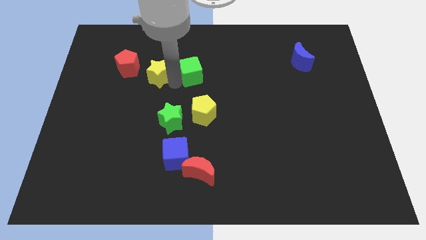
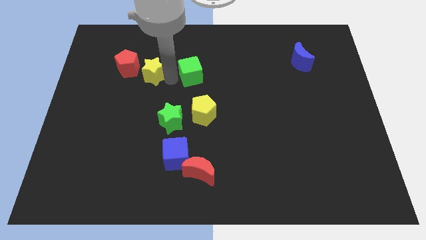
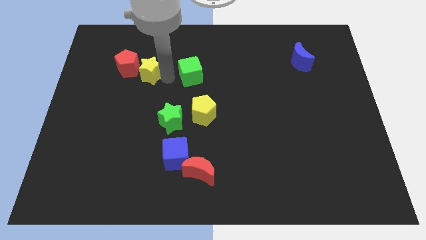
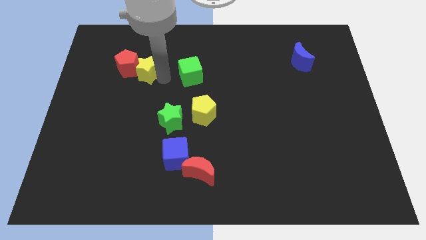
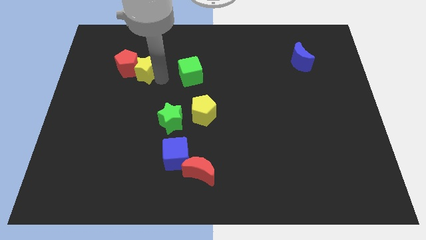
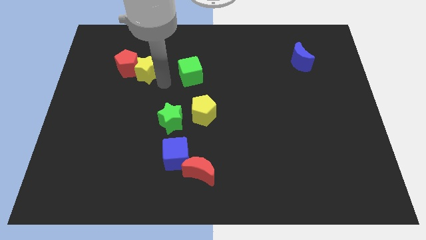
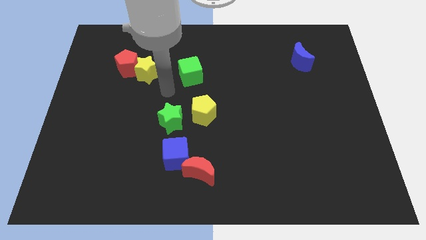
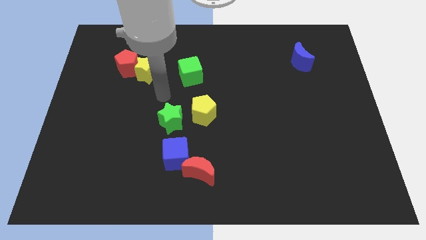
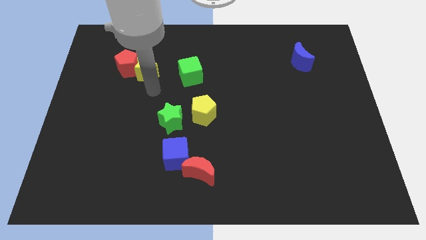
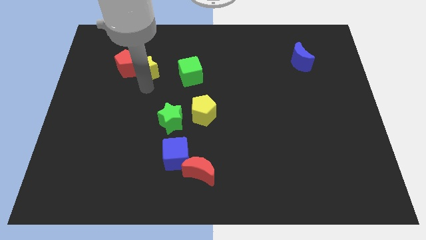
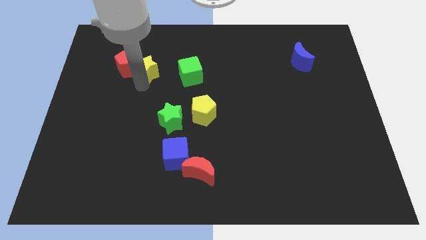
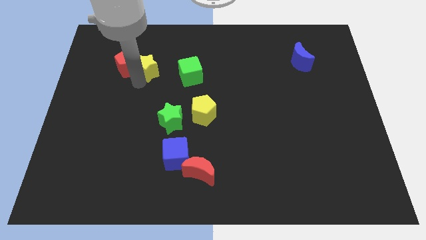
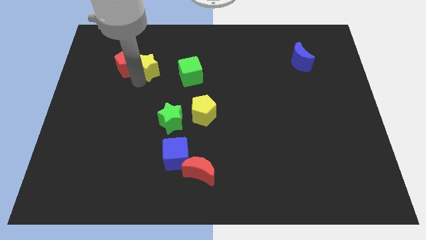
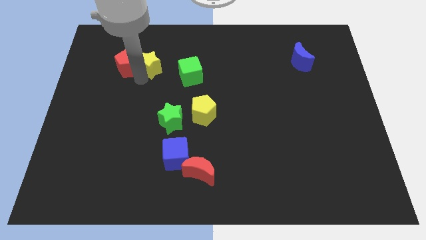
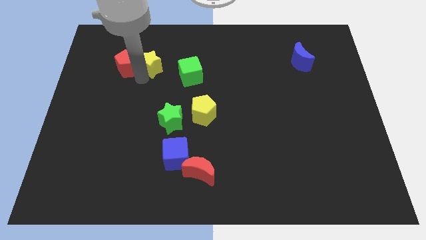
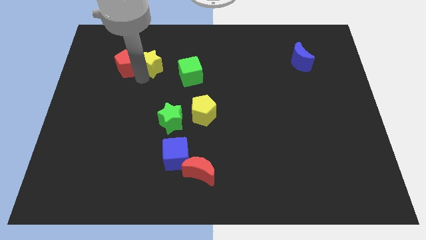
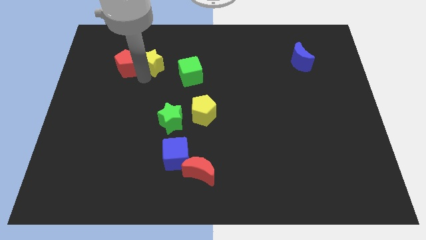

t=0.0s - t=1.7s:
move the yellow star to the right of the red pentagon

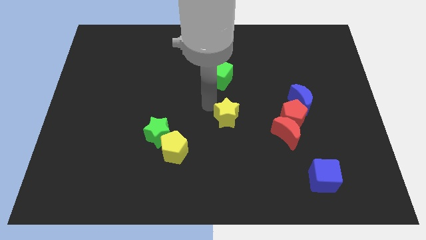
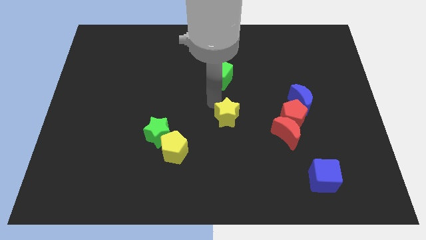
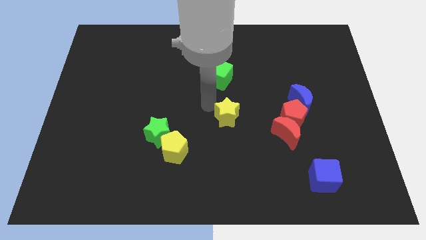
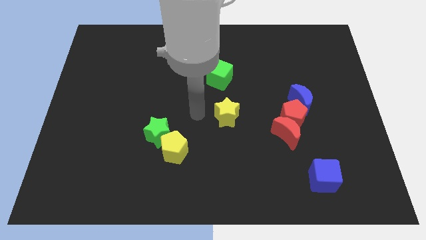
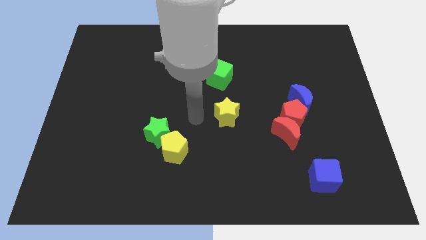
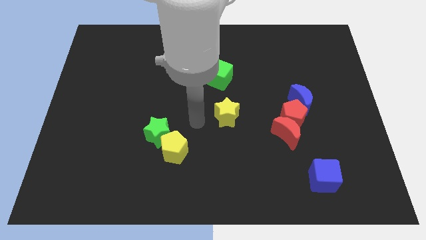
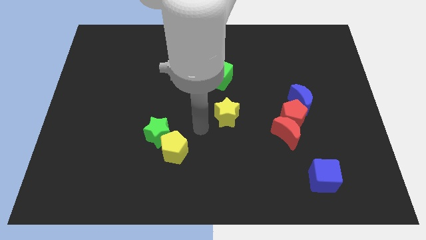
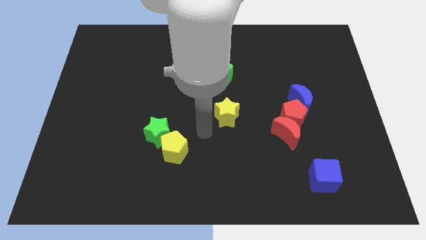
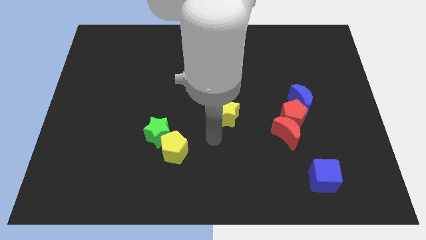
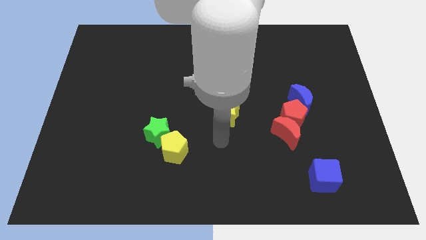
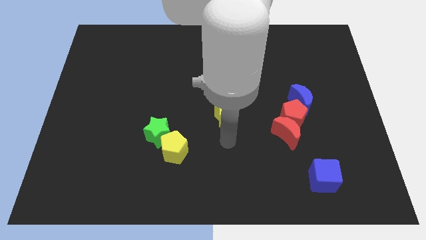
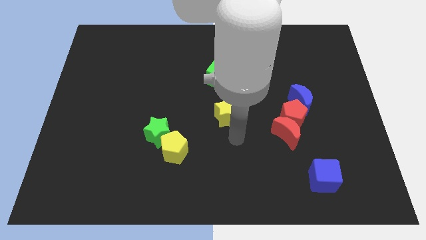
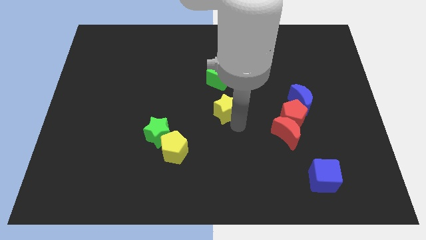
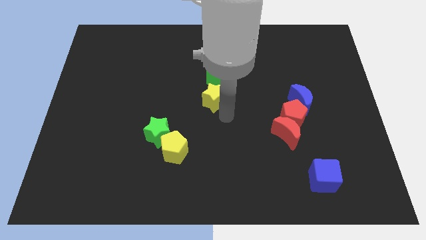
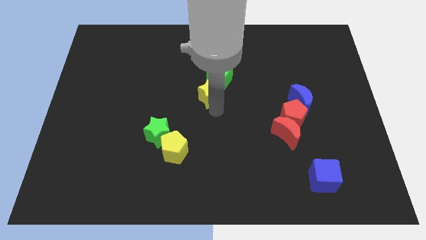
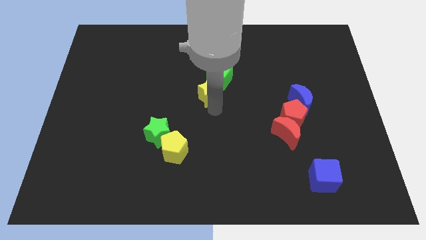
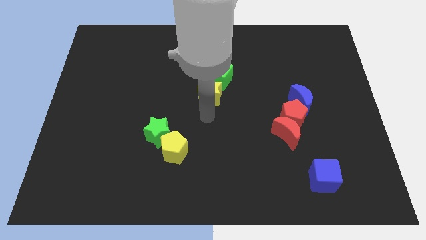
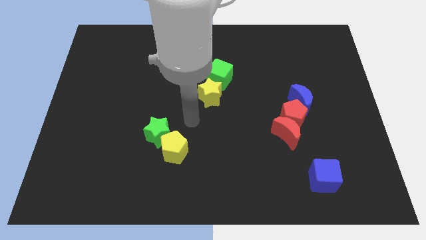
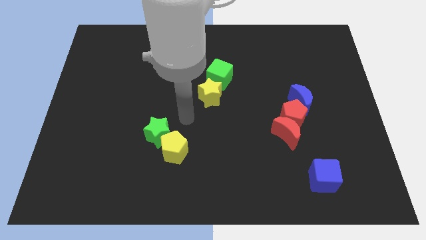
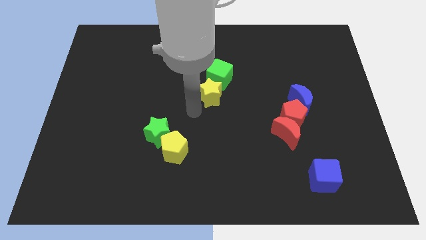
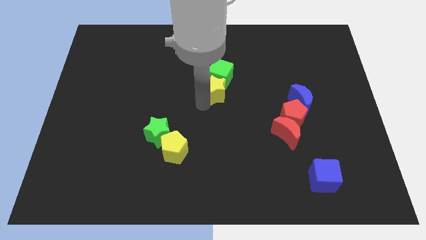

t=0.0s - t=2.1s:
place the yellow star below the green cube

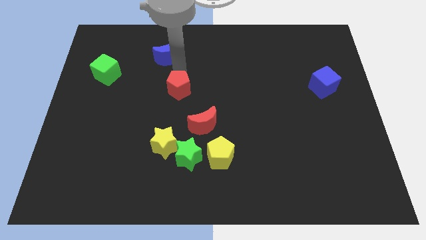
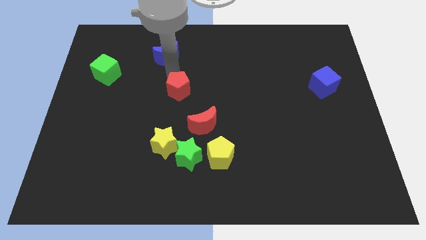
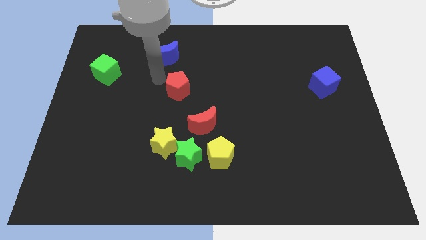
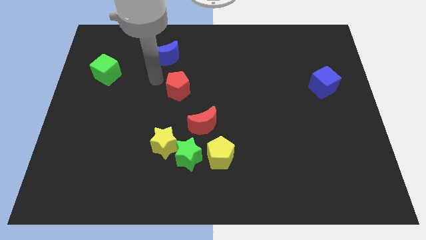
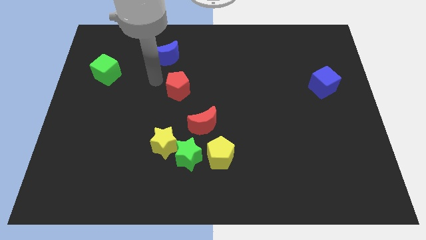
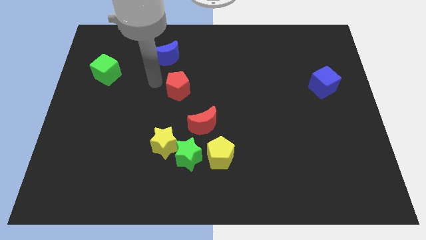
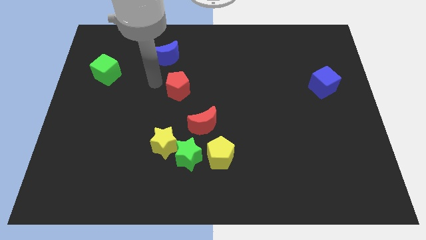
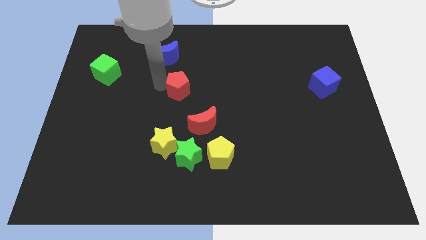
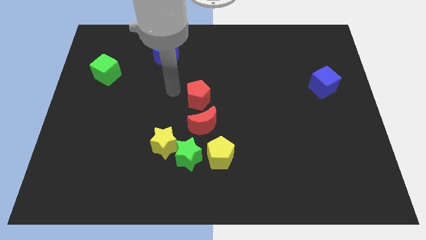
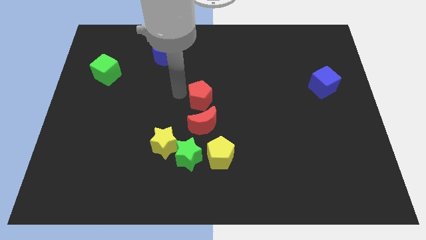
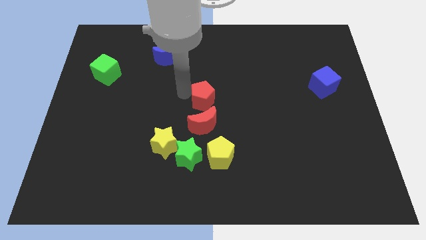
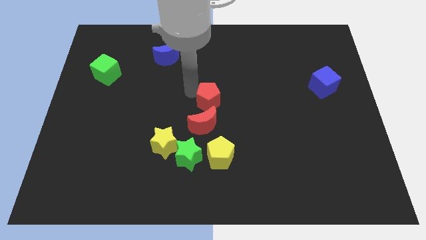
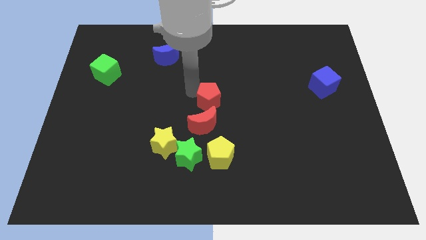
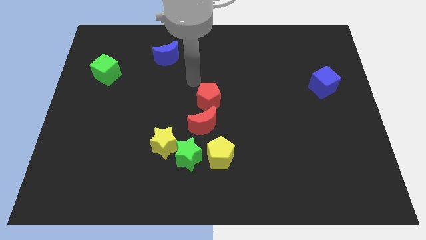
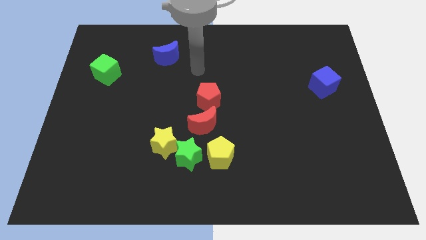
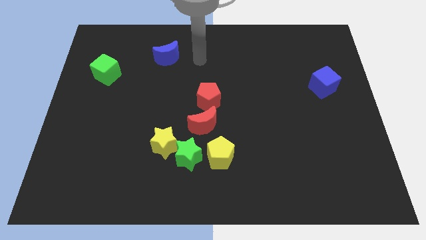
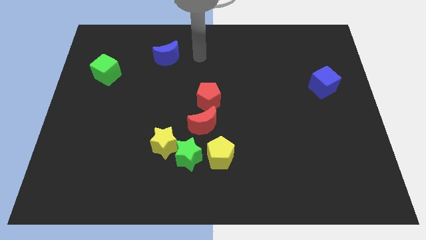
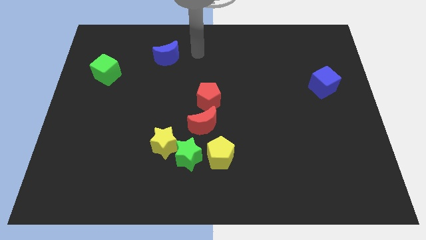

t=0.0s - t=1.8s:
move the red pentagon above the red crescent

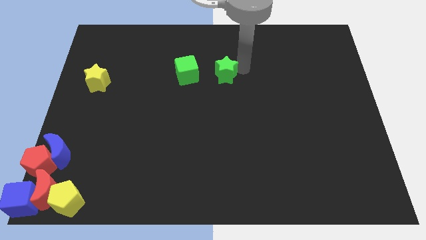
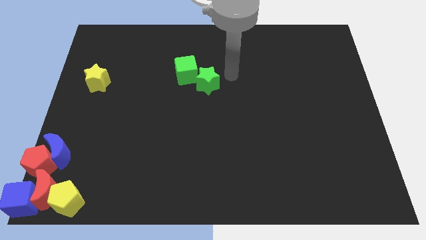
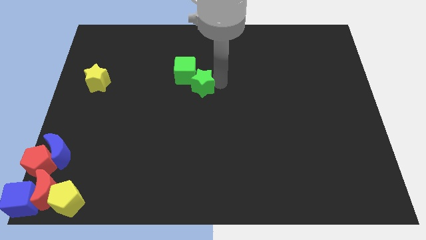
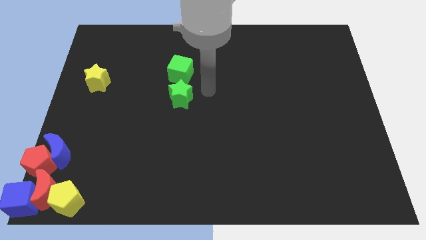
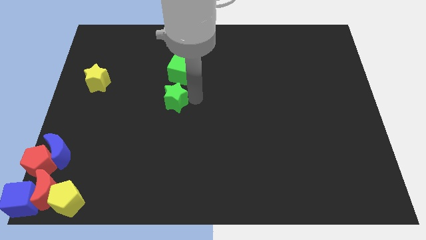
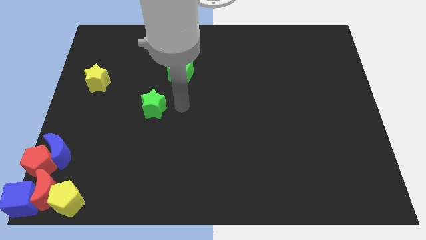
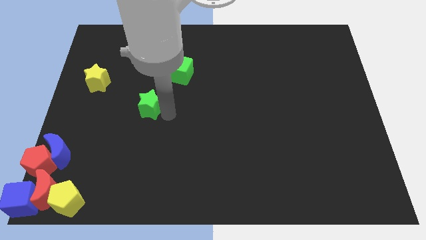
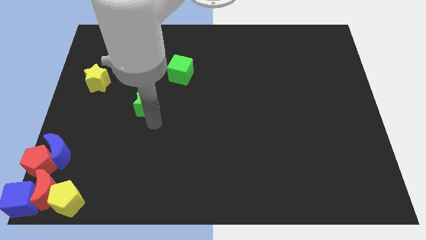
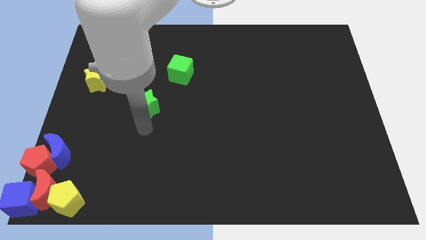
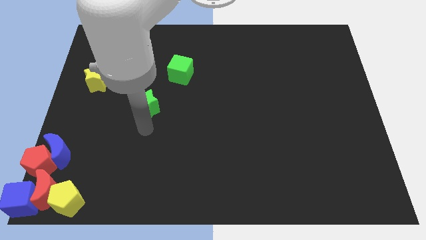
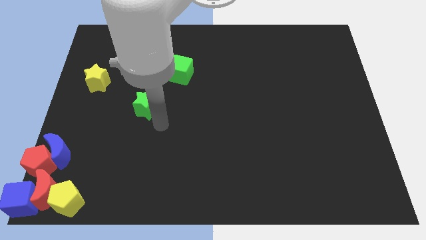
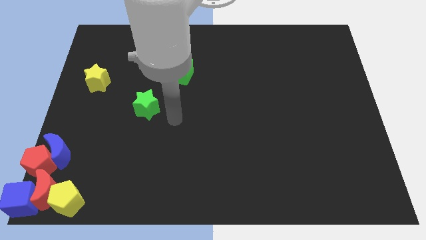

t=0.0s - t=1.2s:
move the green star parallel to the bottom left of the green cube

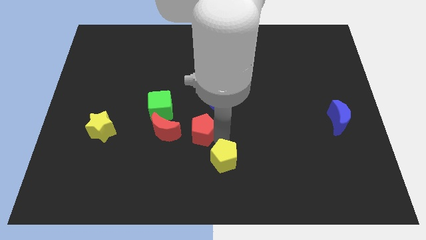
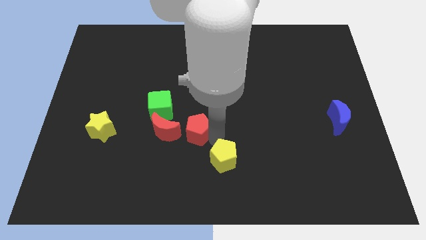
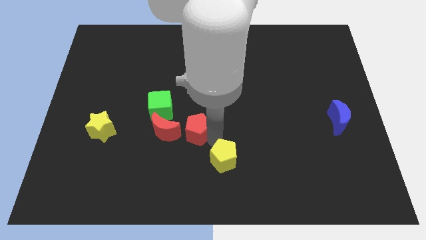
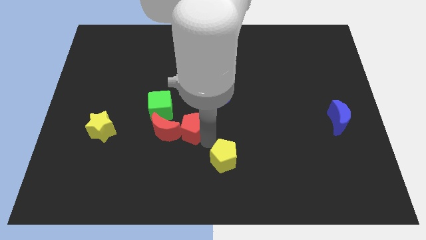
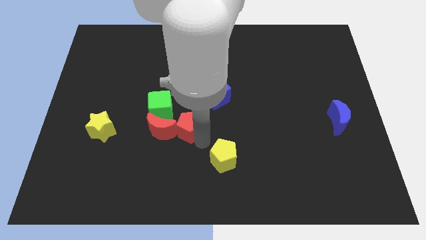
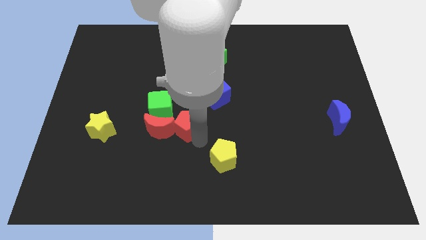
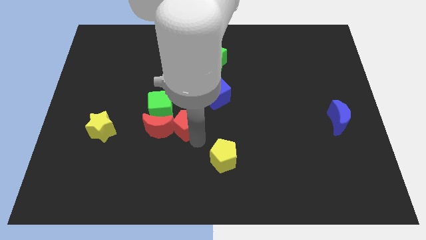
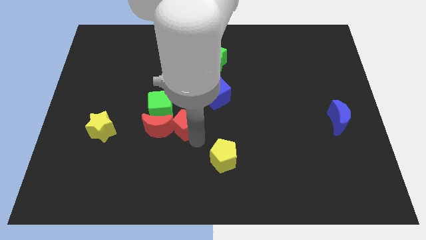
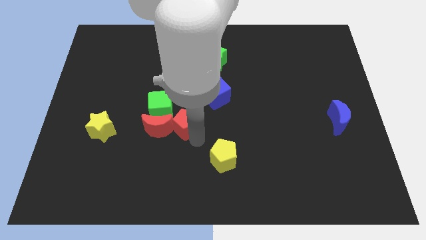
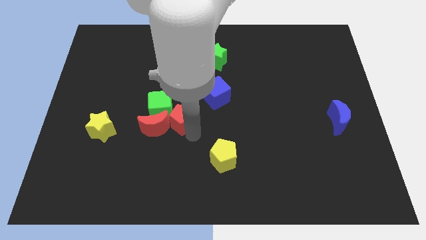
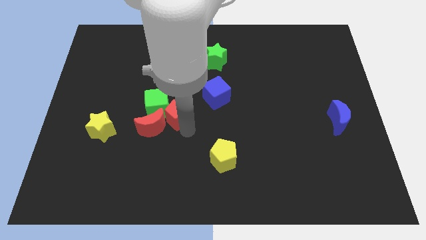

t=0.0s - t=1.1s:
push the red pentagon into the red crescent

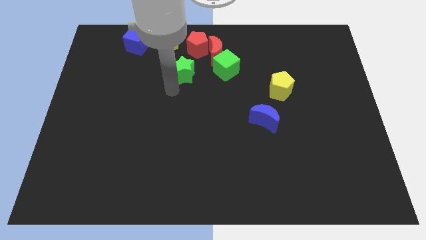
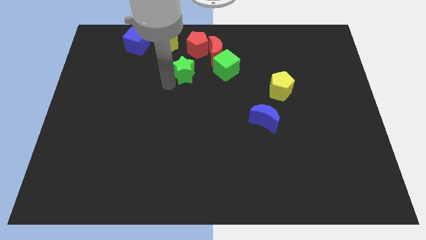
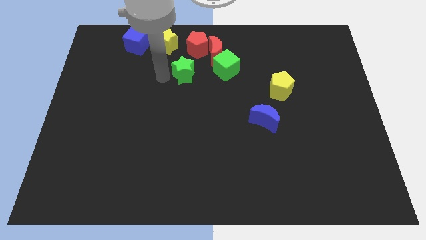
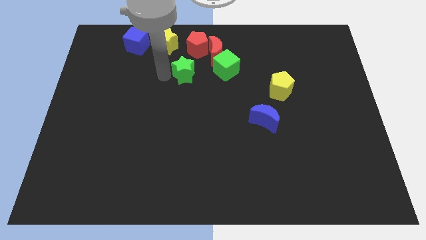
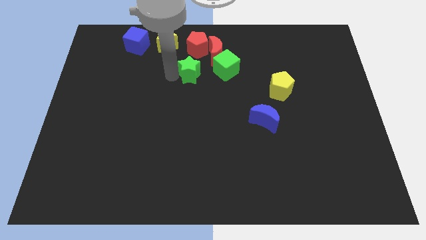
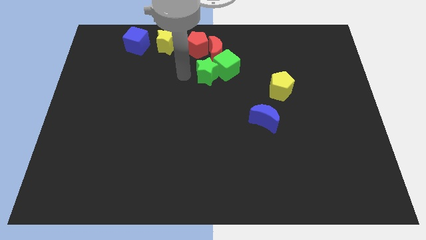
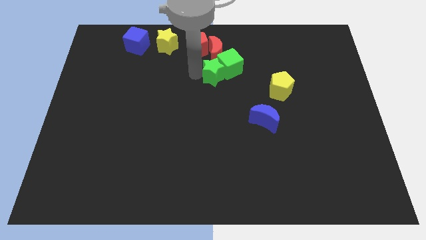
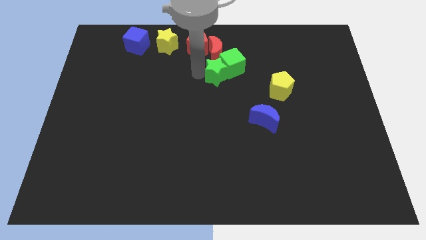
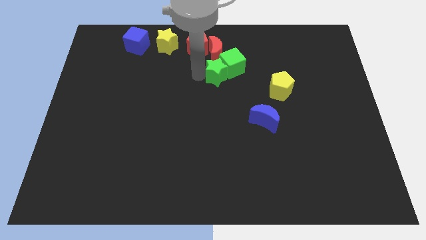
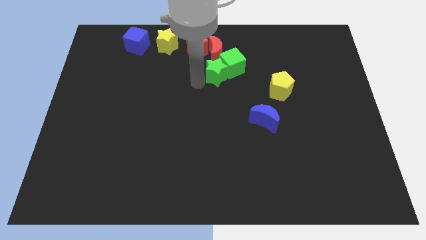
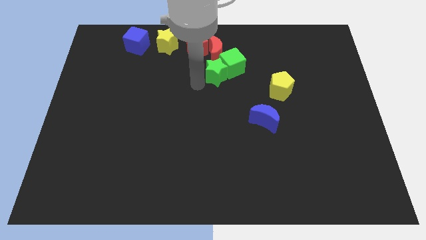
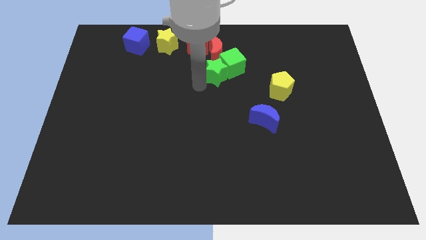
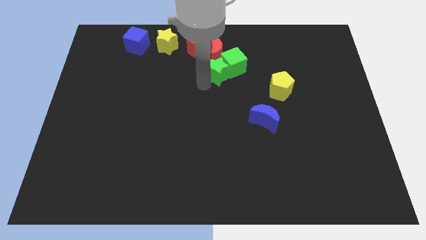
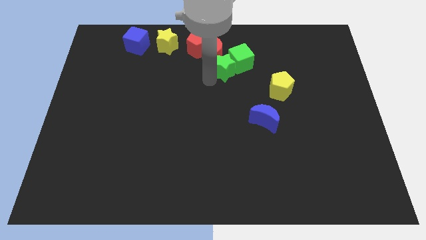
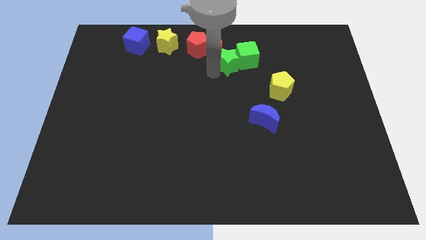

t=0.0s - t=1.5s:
push the green star into the green cube
